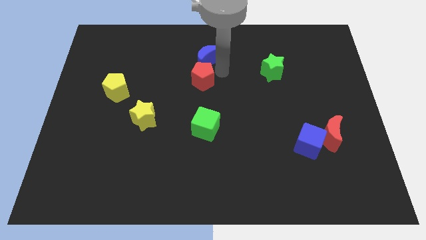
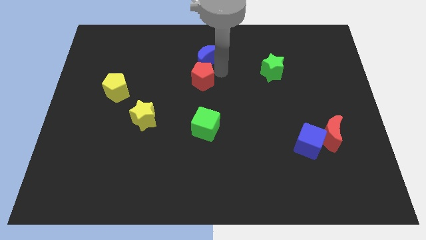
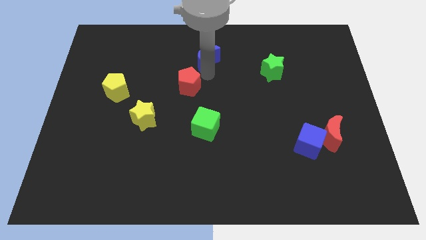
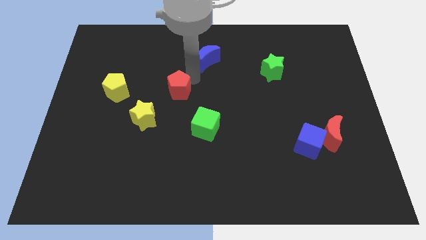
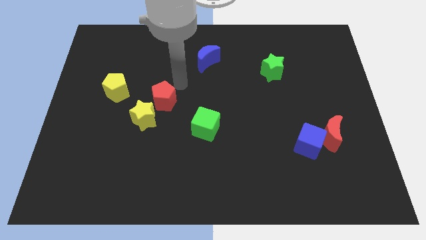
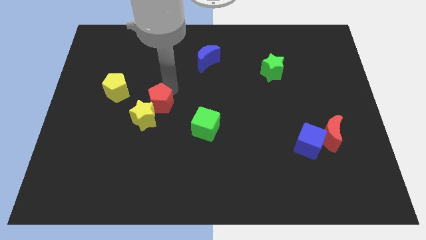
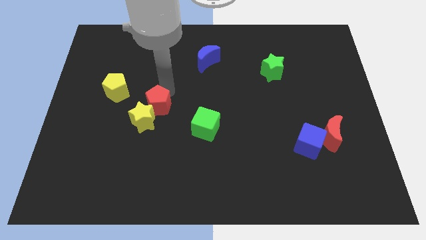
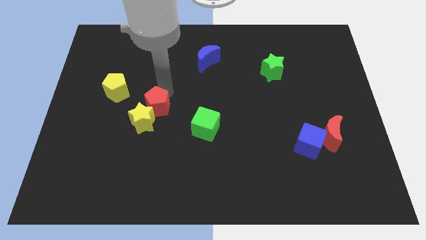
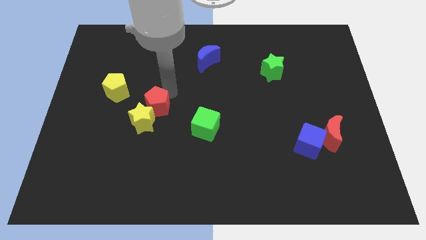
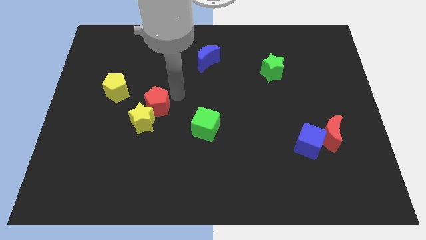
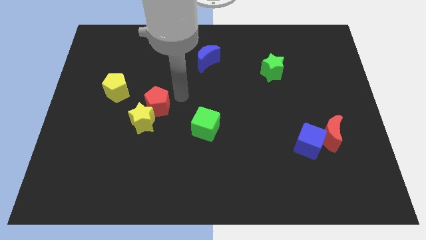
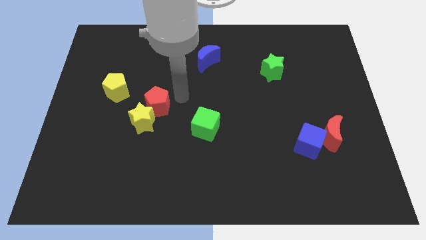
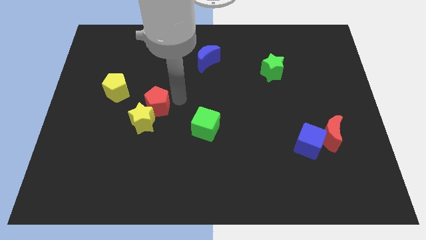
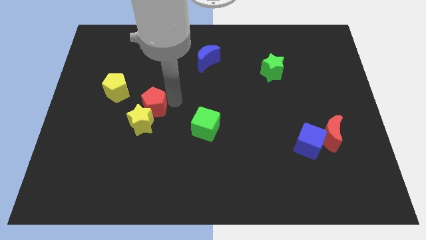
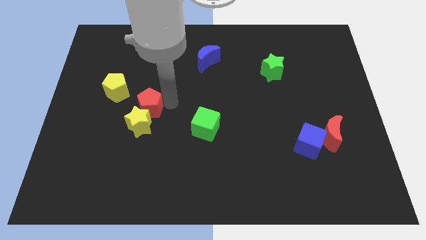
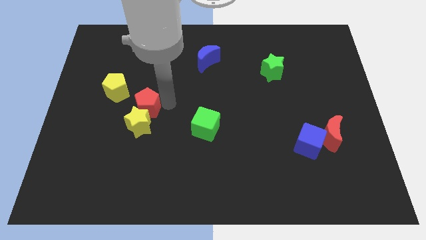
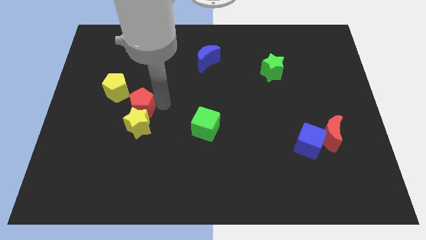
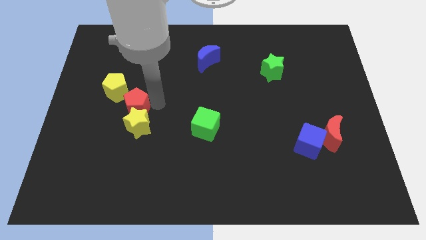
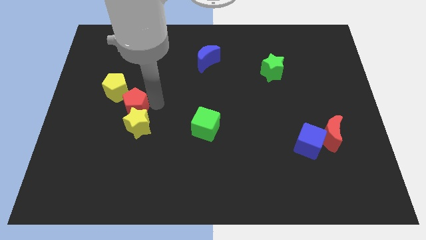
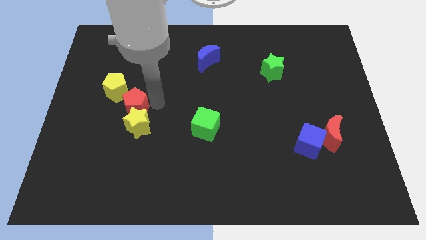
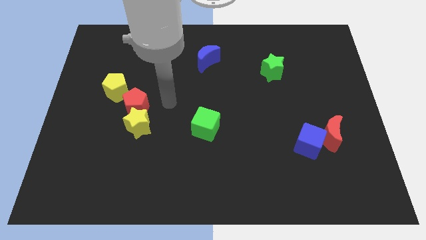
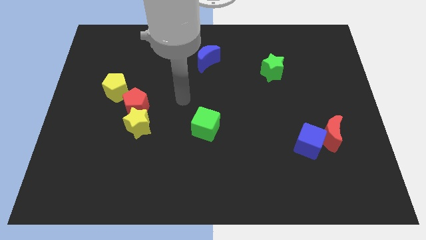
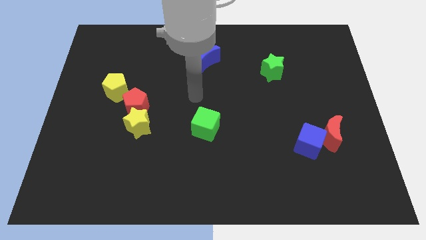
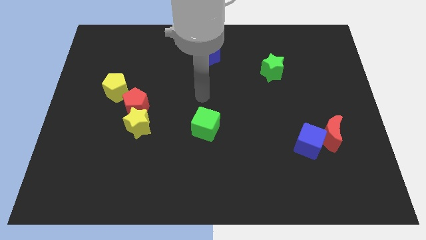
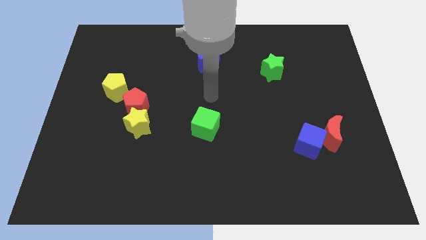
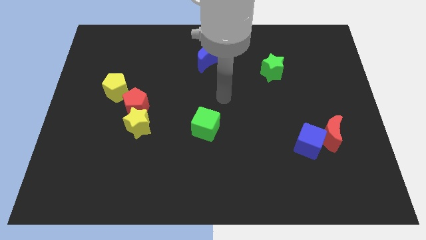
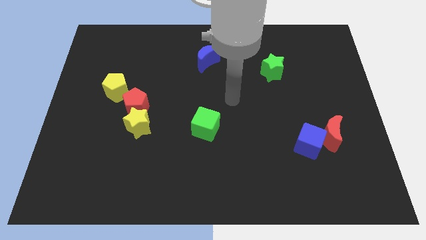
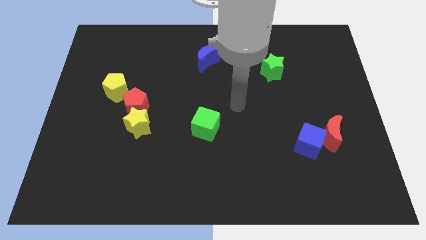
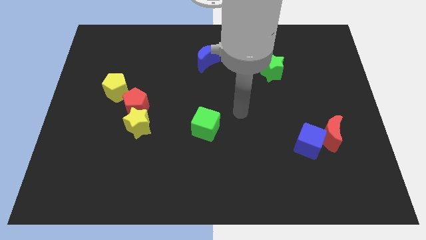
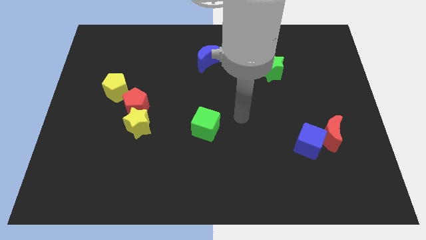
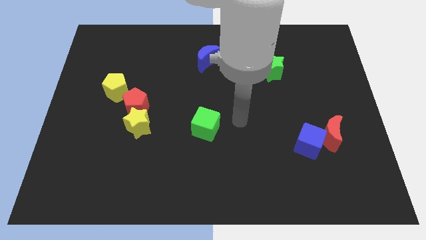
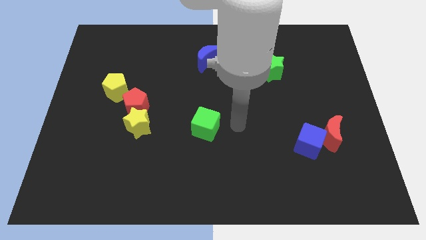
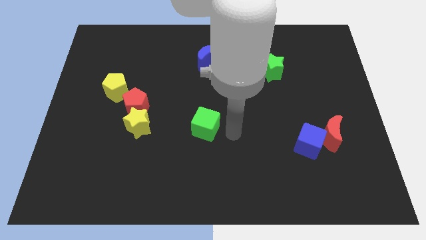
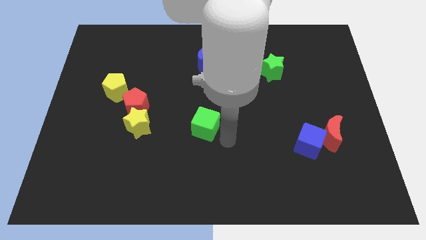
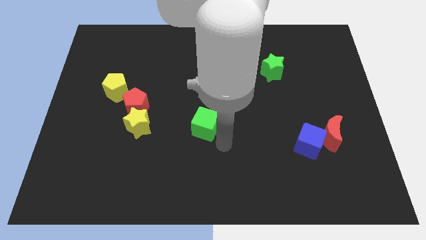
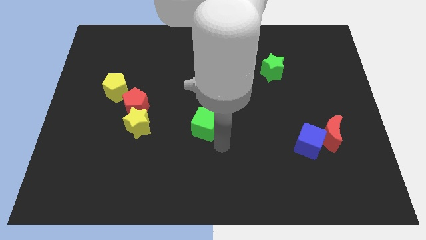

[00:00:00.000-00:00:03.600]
put the red pentagon in between the yellow blocks

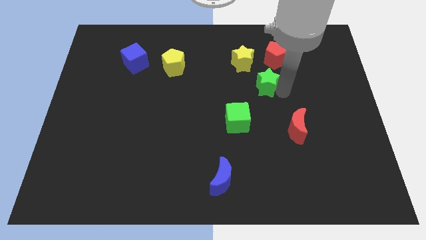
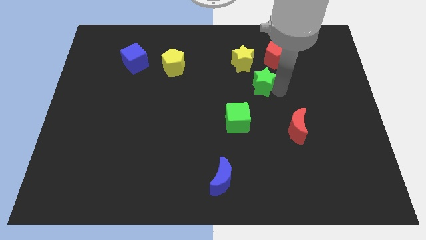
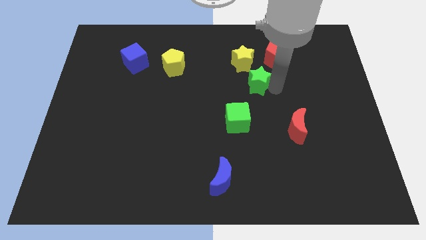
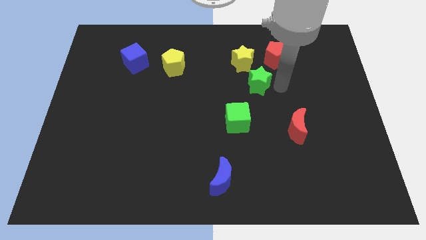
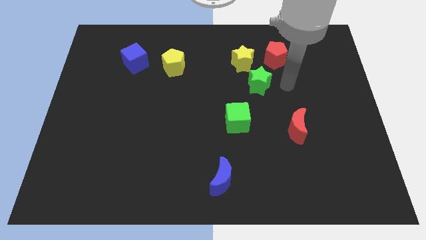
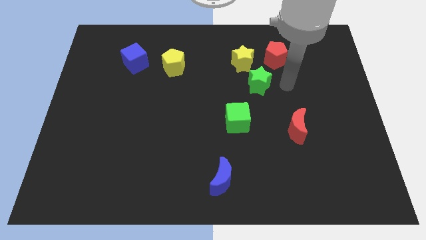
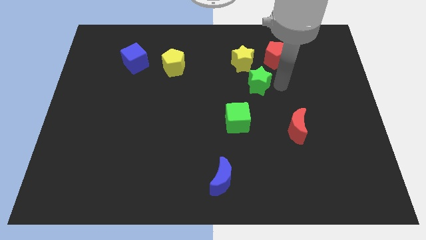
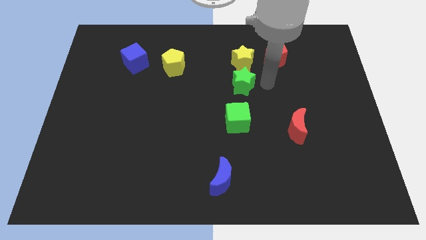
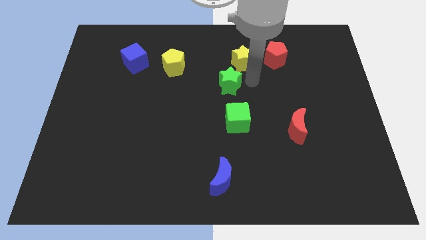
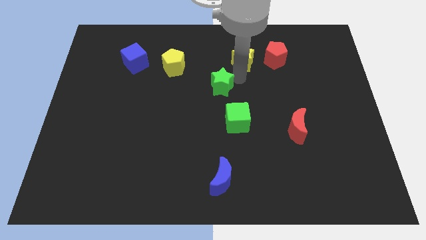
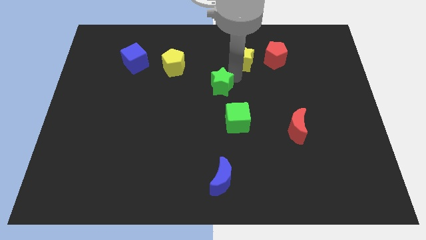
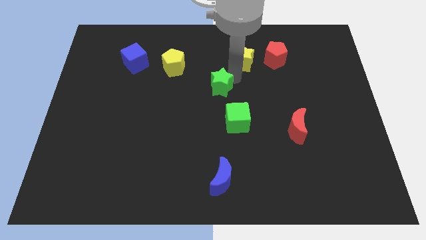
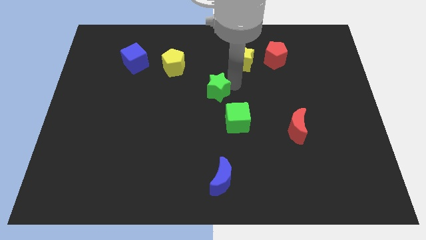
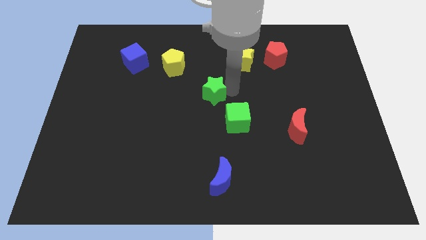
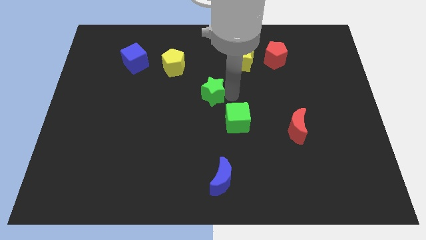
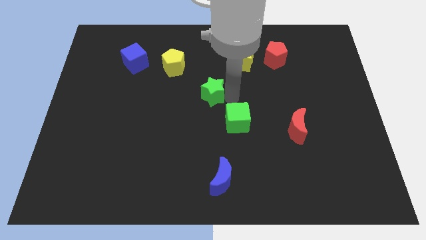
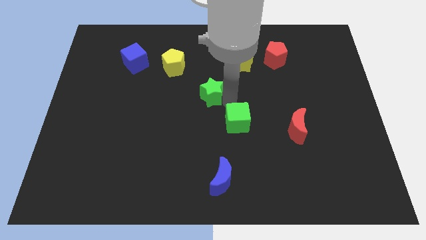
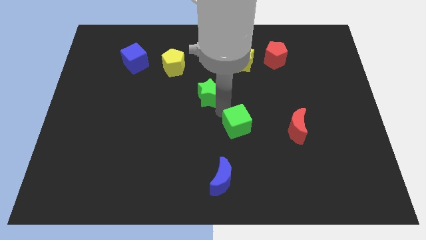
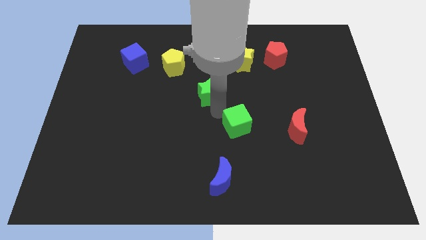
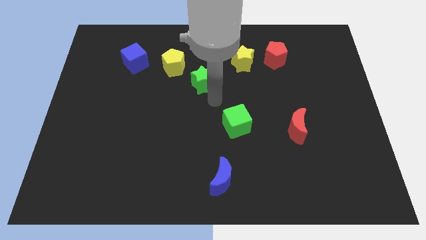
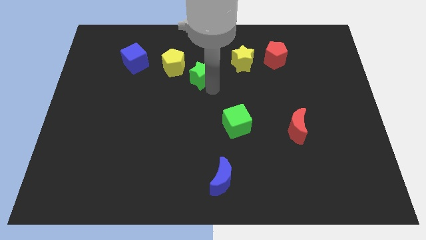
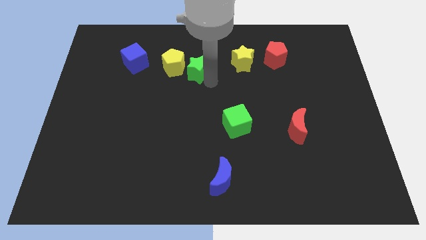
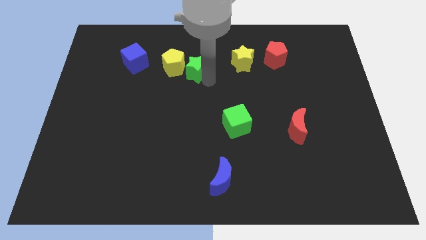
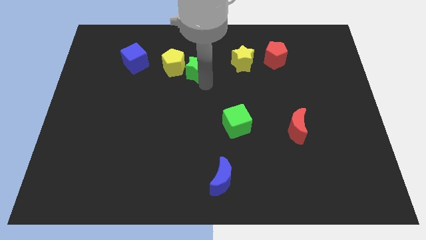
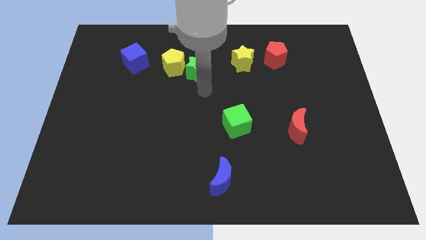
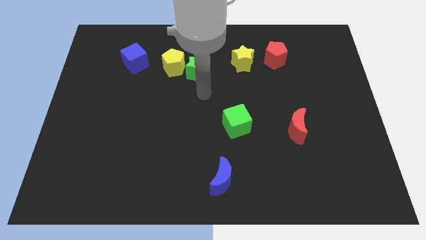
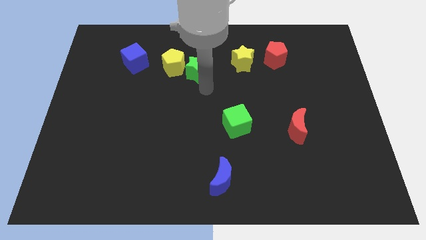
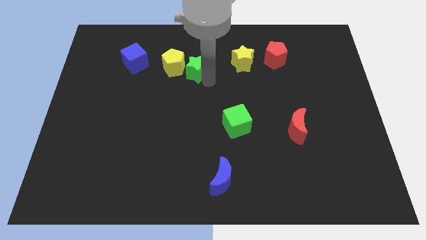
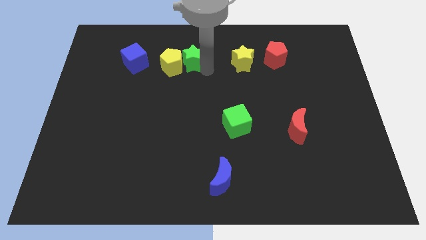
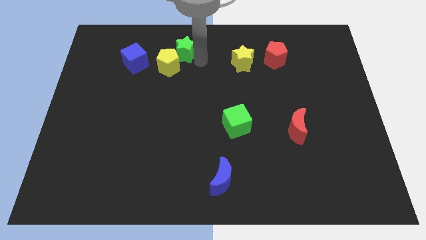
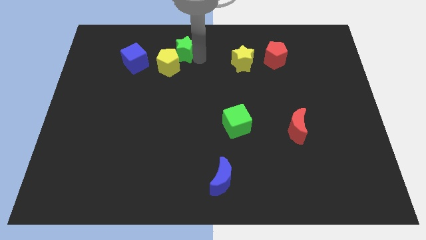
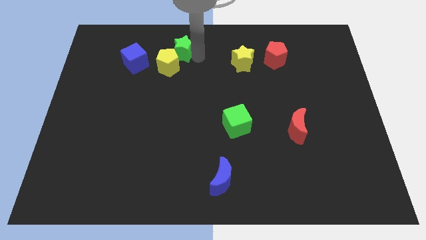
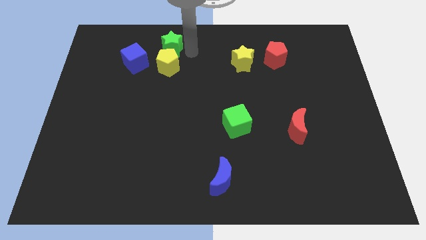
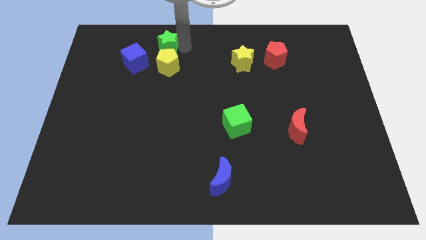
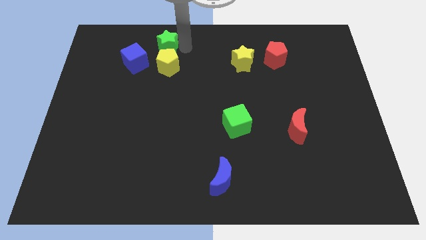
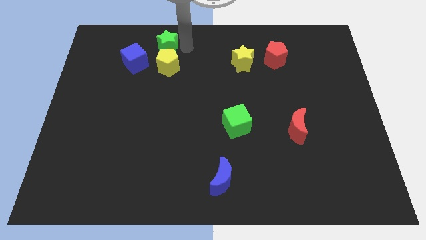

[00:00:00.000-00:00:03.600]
push the green star to the top of the board

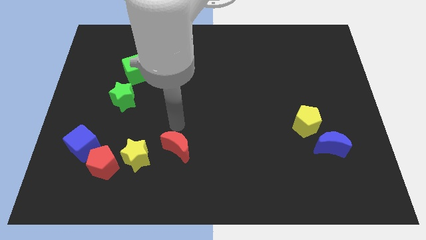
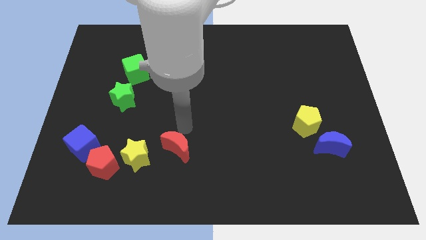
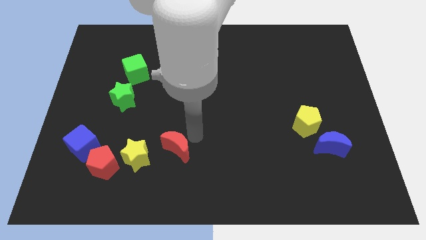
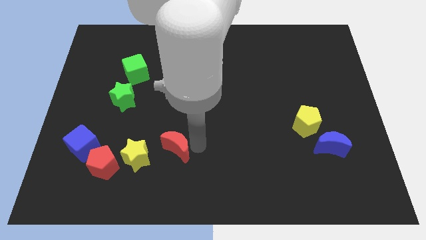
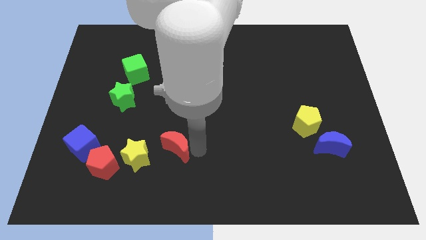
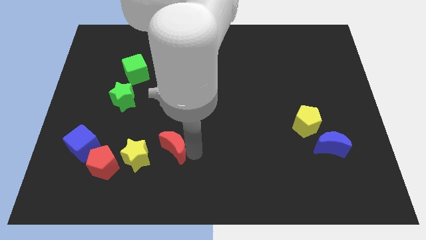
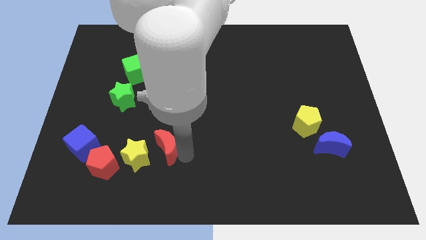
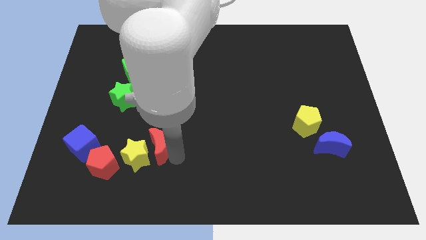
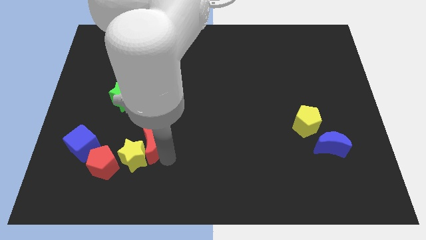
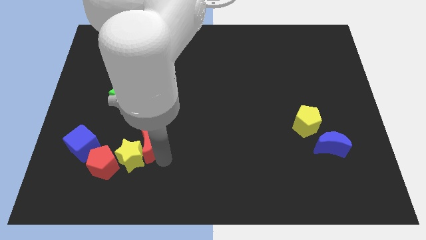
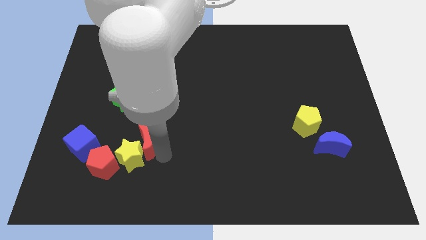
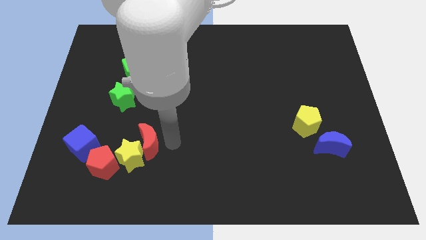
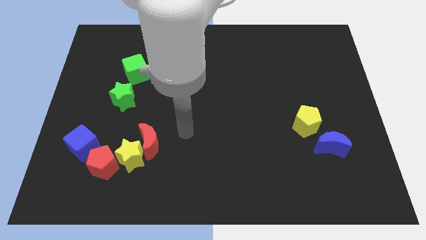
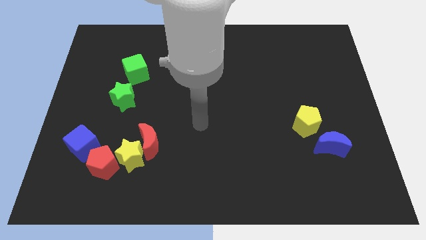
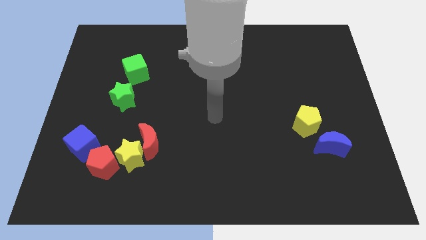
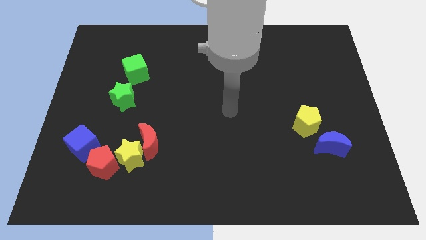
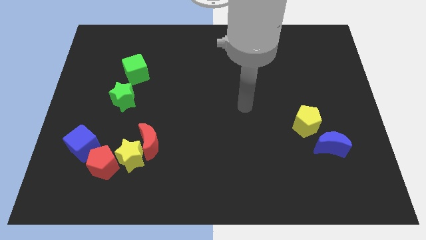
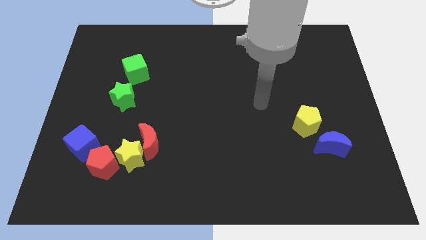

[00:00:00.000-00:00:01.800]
move the red moon into the yellow star
